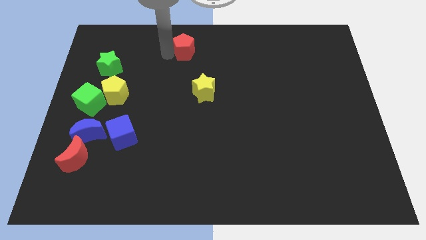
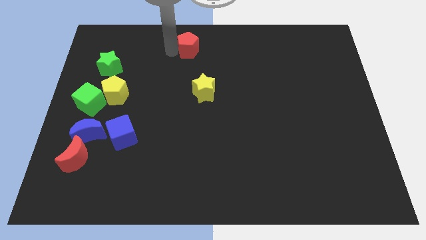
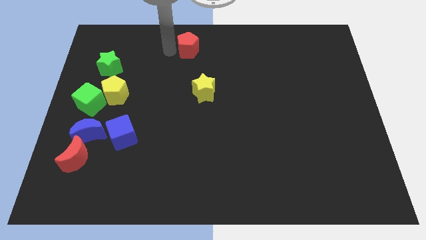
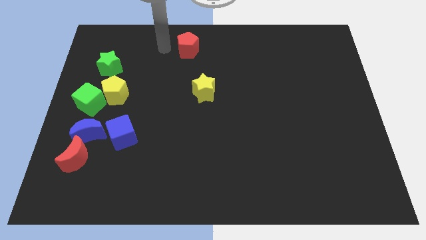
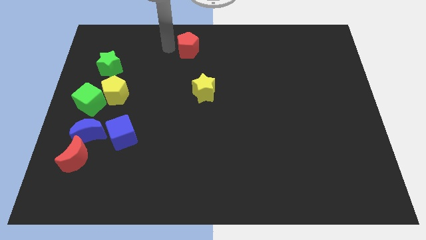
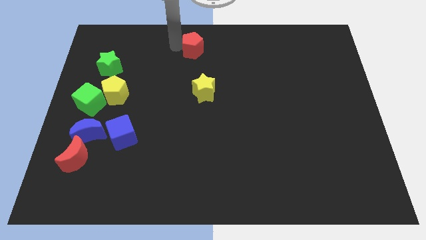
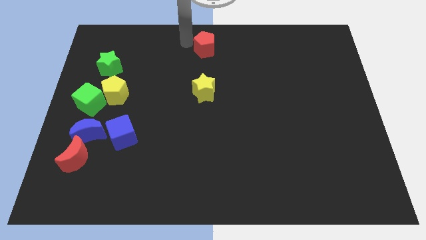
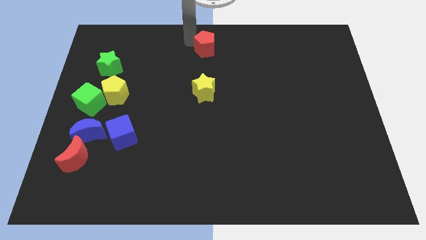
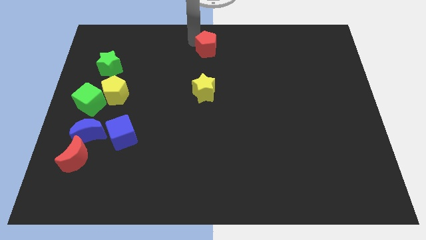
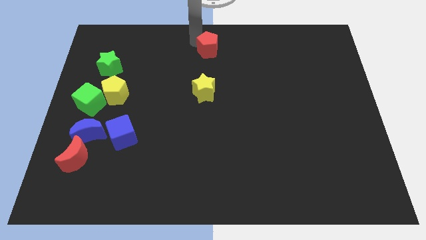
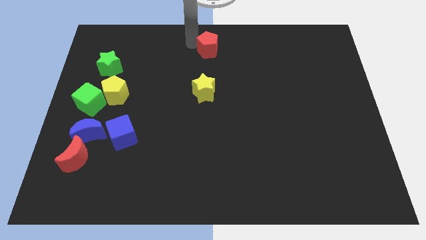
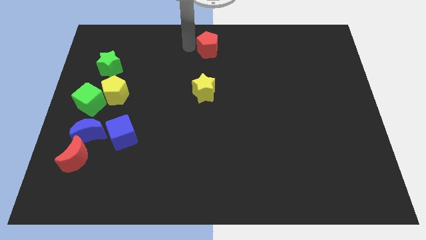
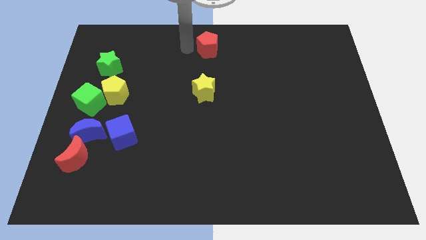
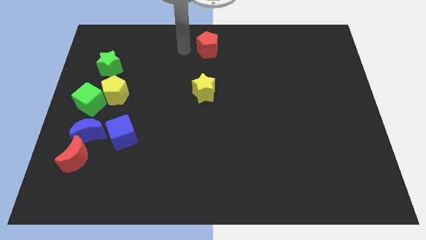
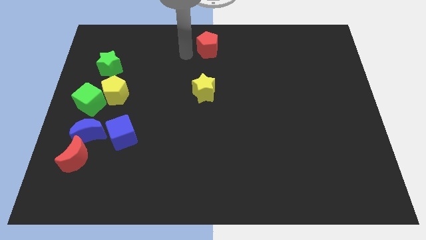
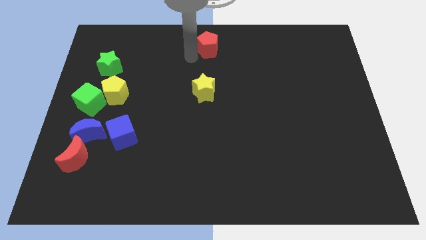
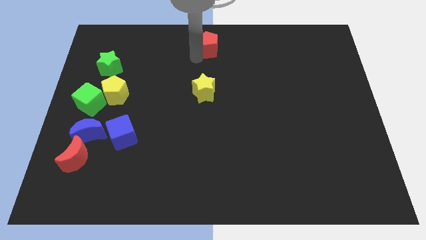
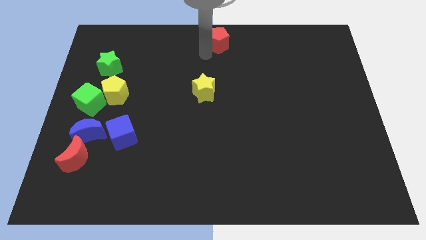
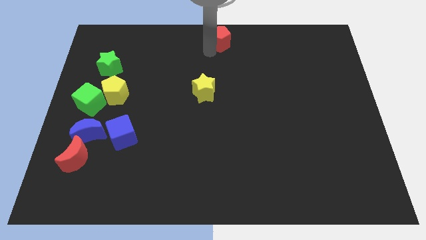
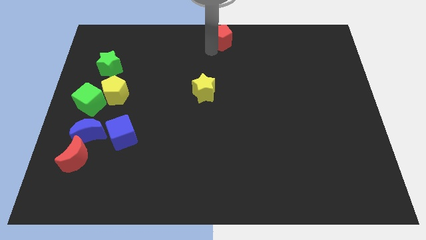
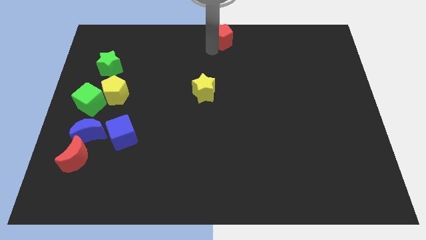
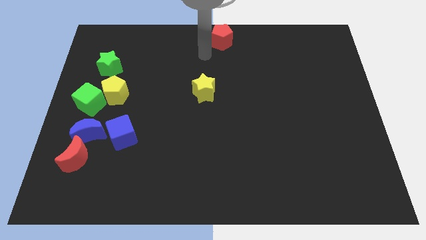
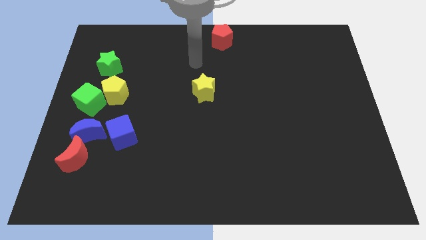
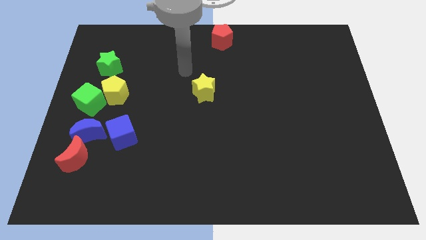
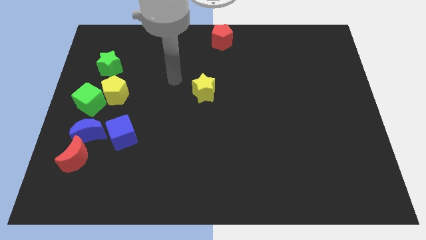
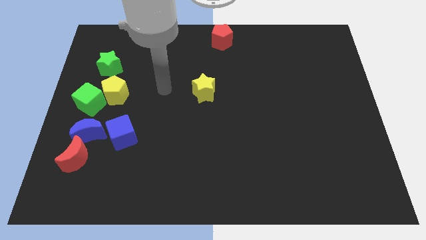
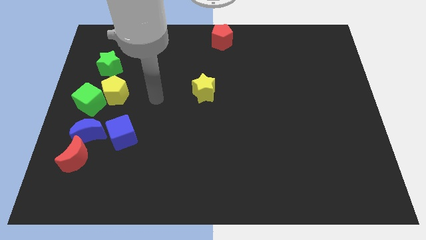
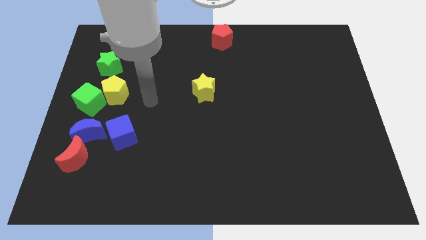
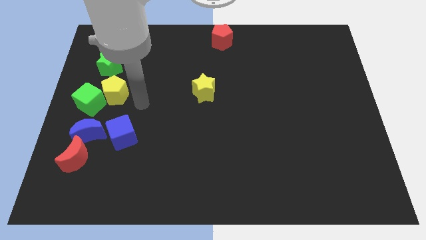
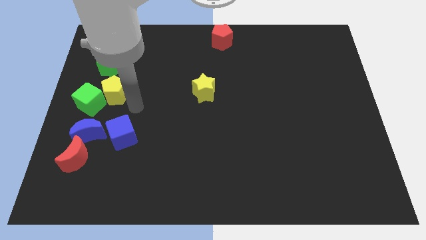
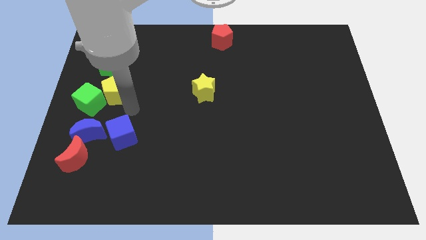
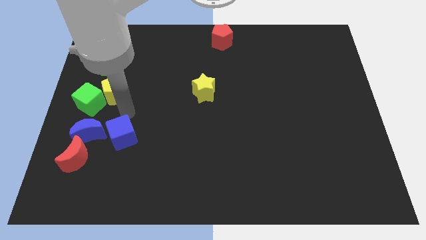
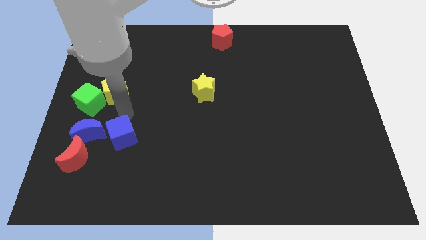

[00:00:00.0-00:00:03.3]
place the red pentagon to the top center of the board

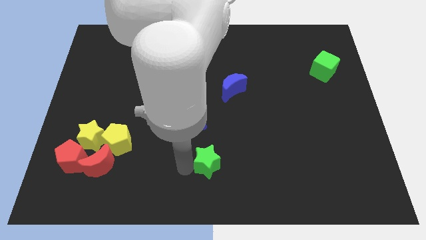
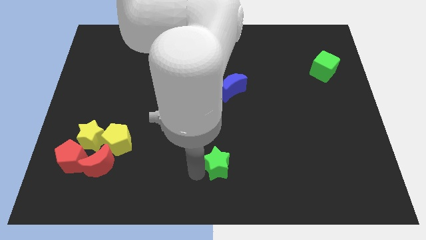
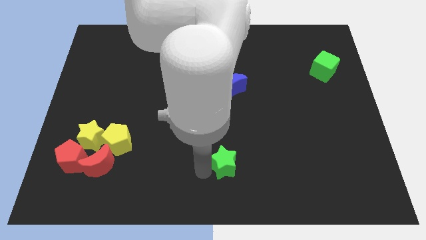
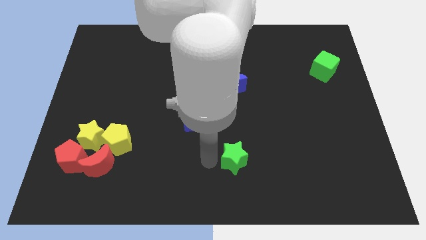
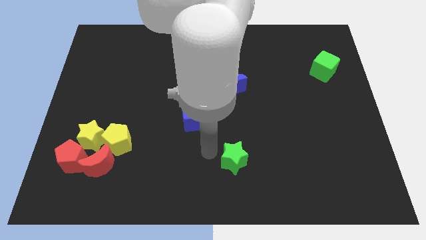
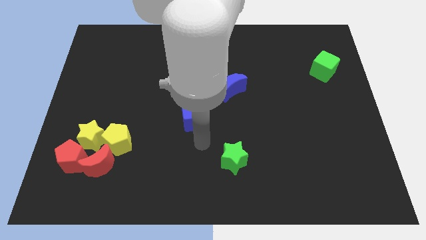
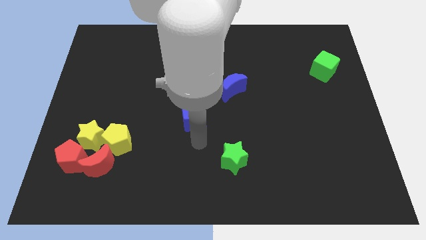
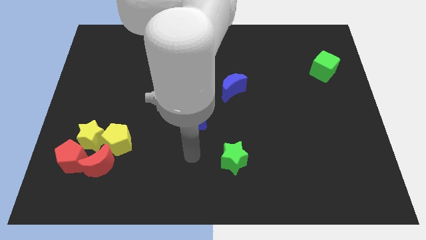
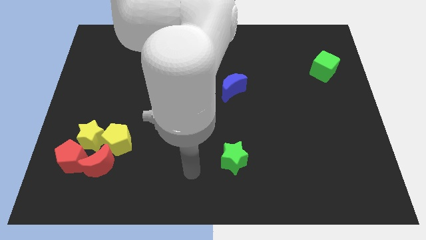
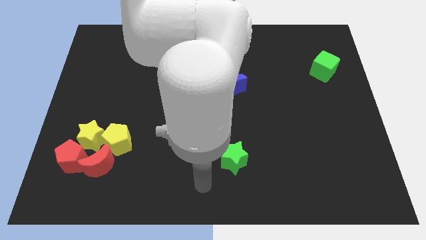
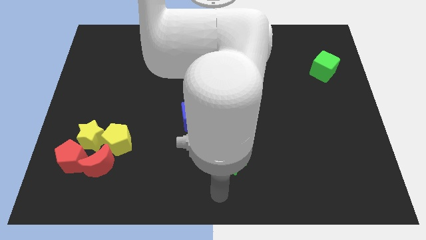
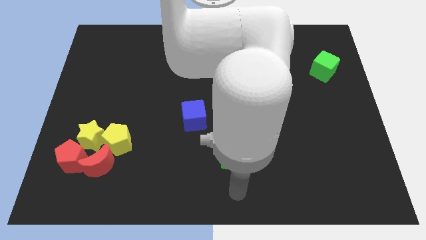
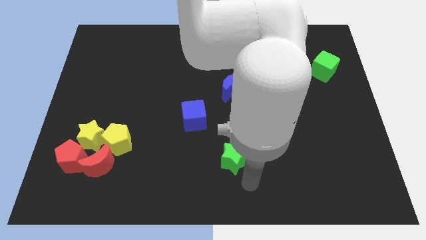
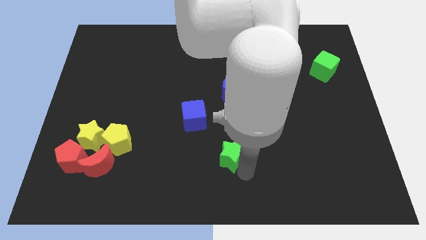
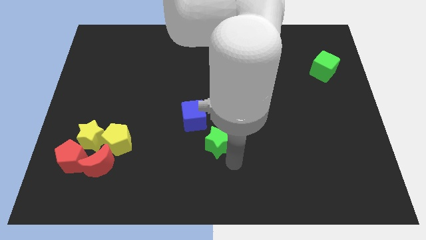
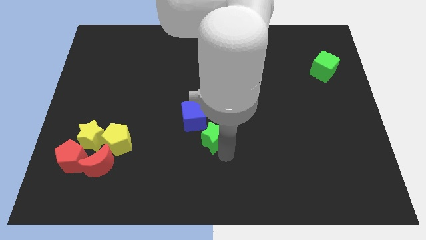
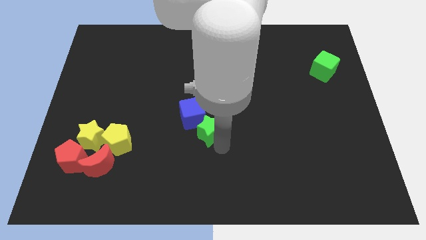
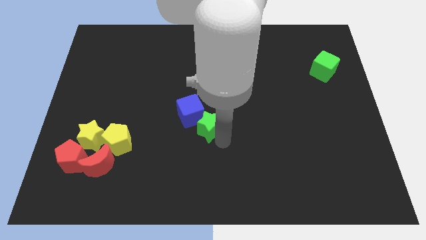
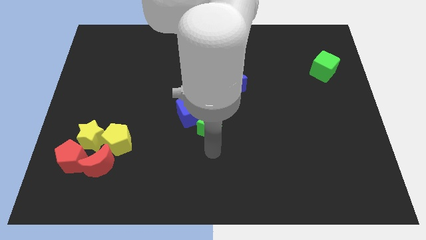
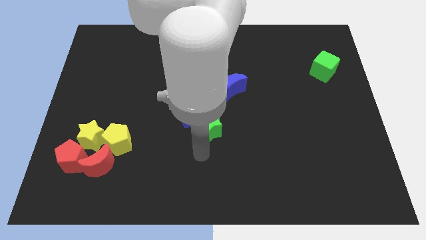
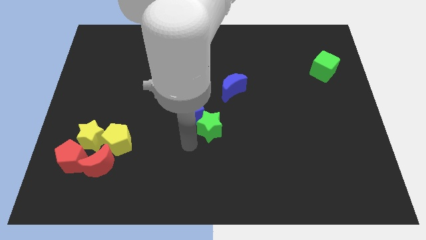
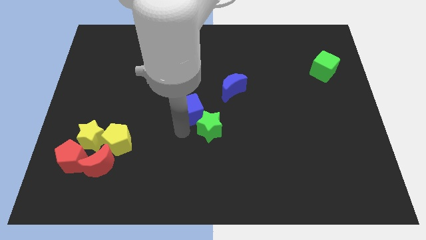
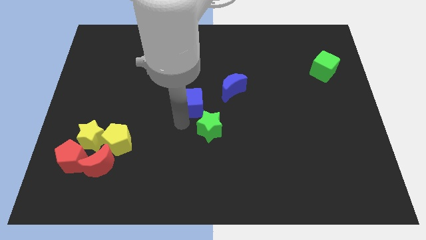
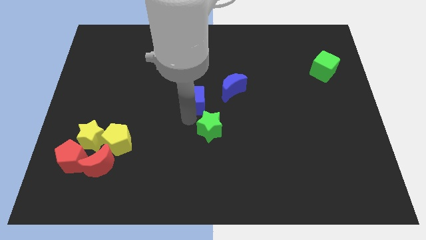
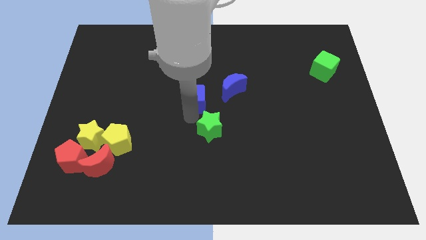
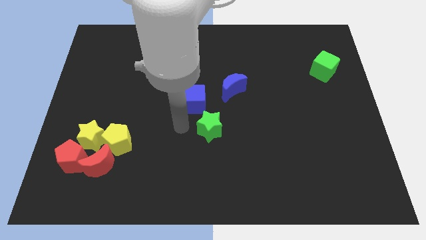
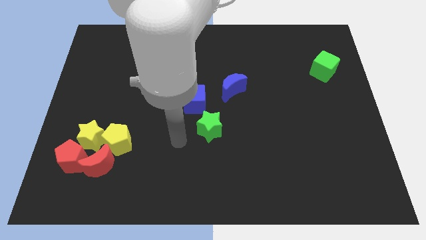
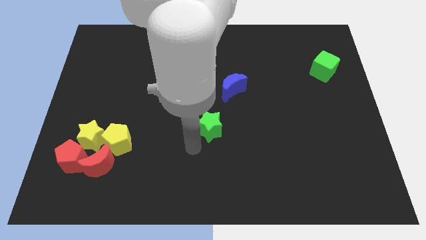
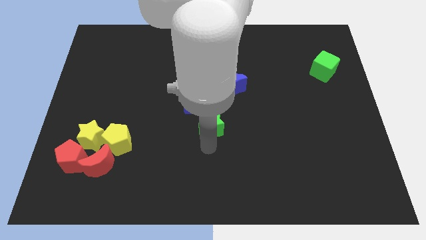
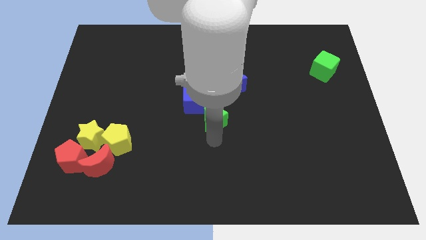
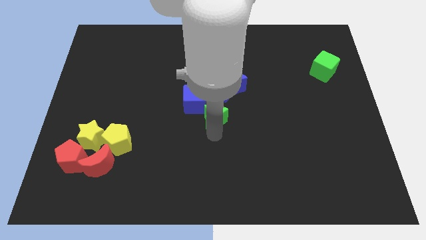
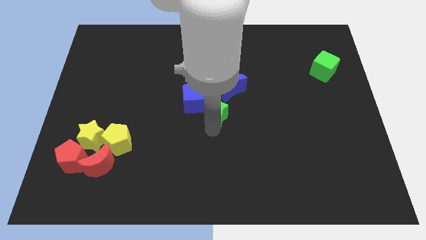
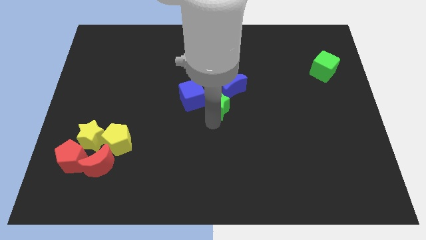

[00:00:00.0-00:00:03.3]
move the green star and blue cube close to the blue moon

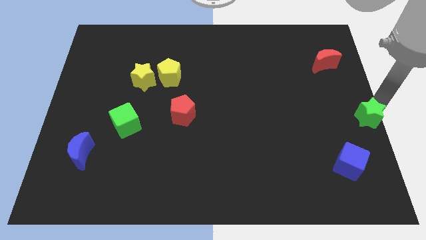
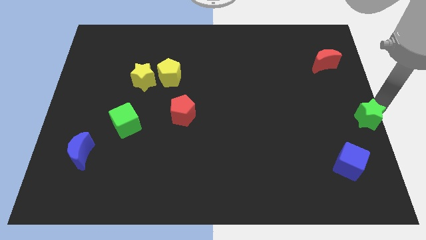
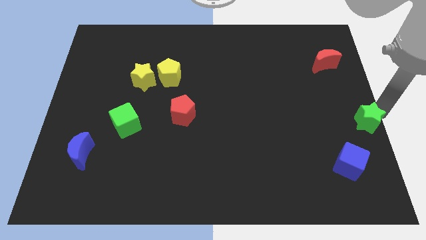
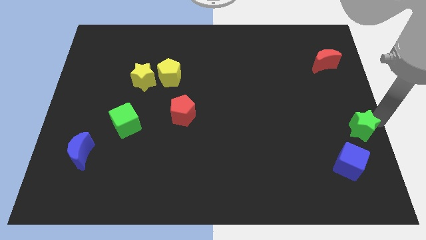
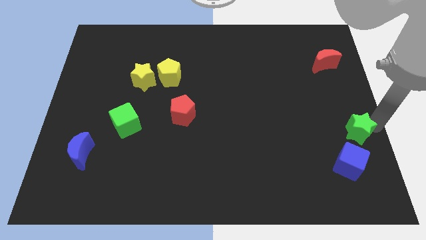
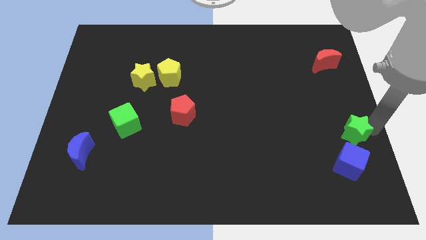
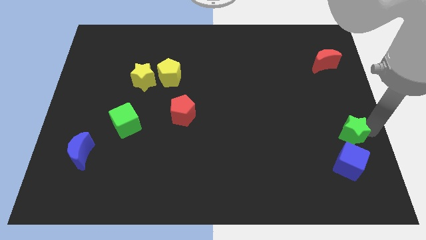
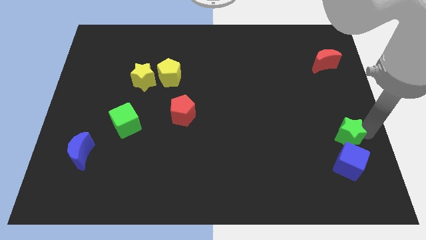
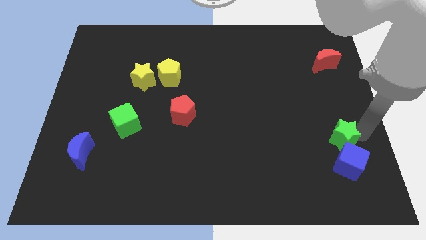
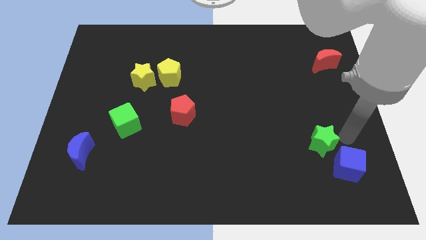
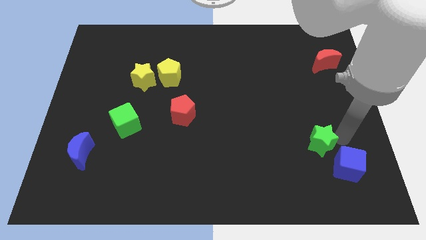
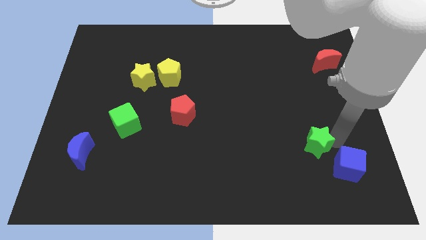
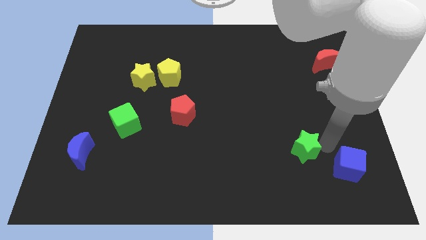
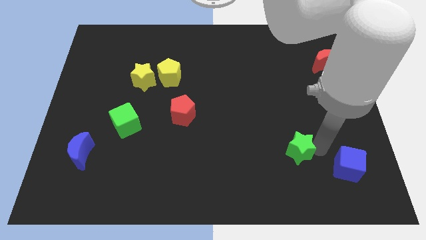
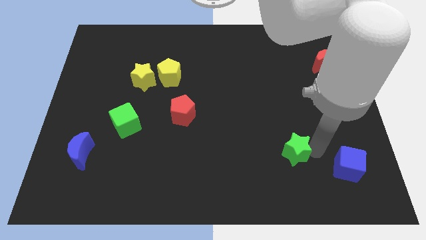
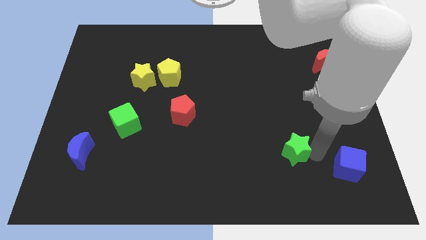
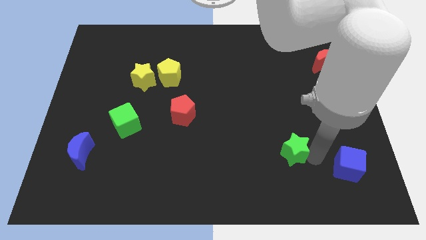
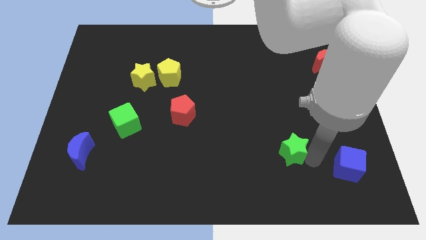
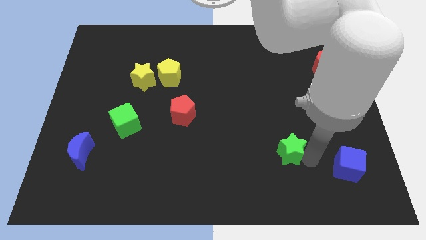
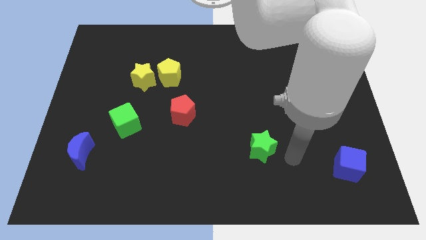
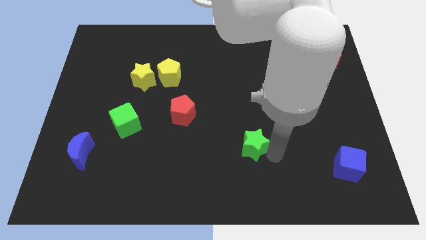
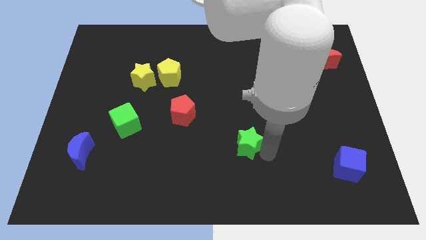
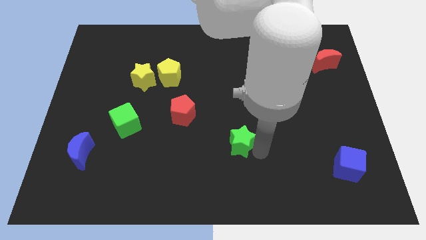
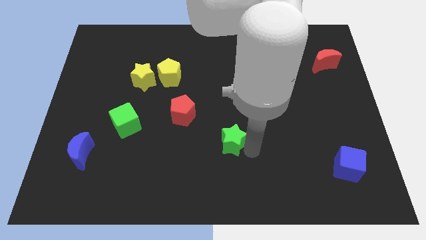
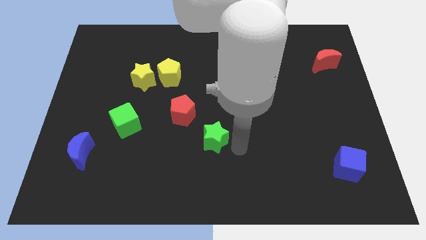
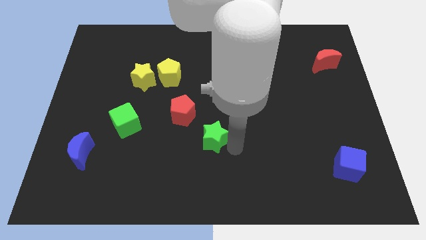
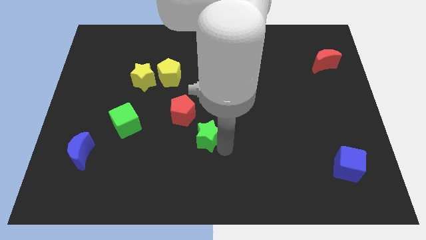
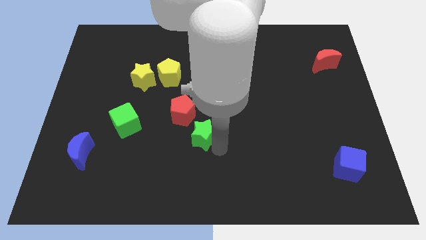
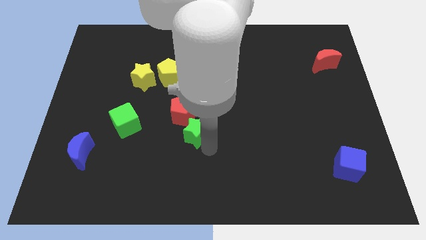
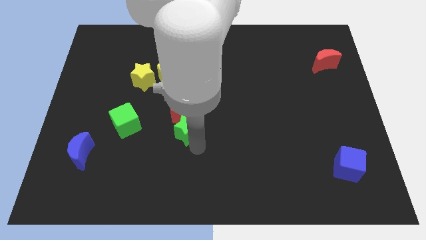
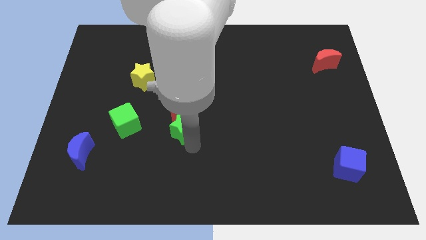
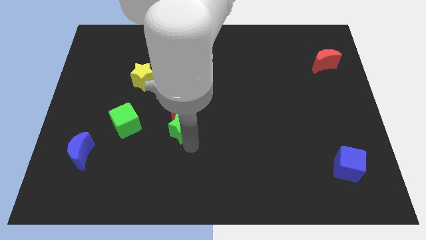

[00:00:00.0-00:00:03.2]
place the green star bellow the red pentagon
